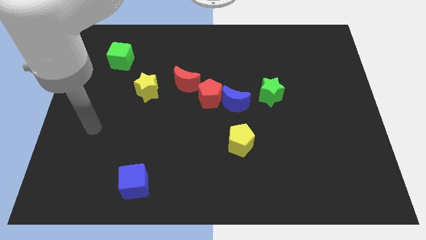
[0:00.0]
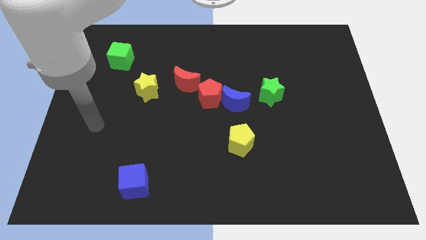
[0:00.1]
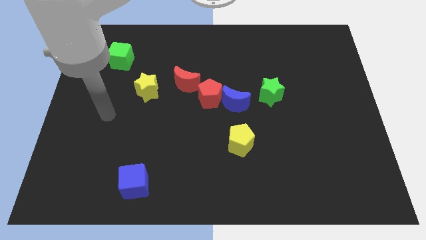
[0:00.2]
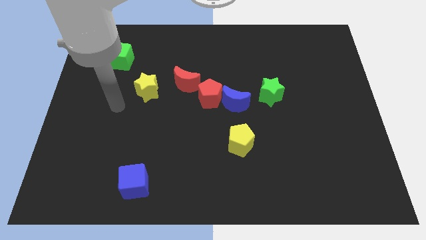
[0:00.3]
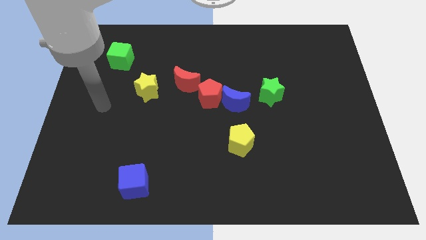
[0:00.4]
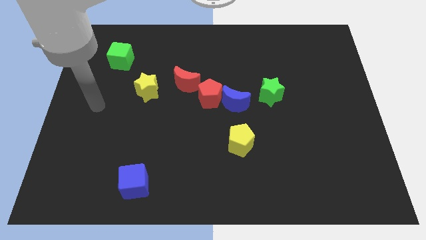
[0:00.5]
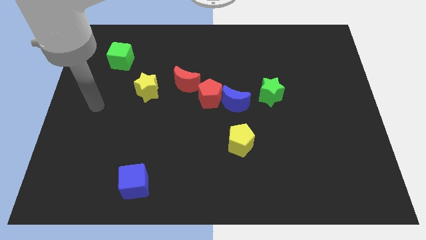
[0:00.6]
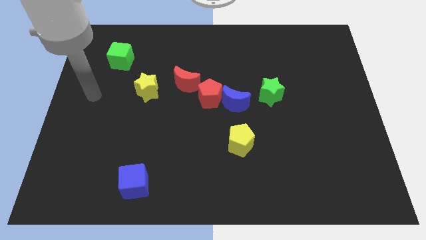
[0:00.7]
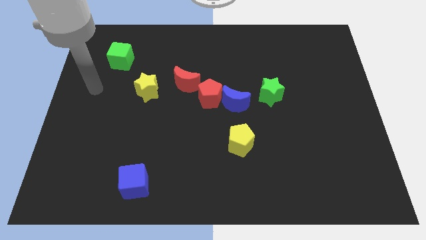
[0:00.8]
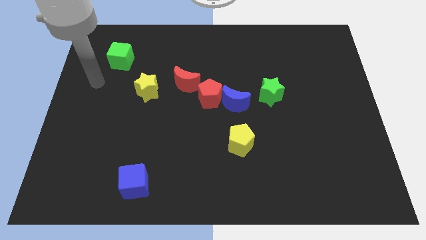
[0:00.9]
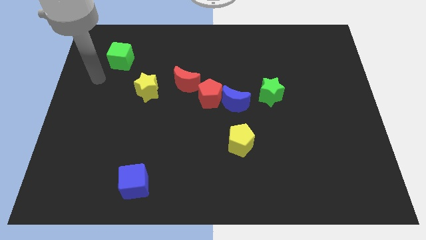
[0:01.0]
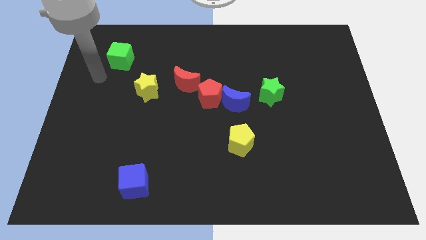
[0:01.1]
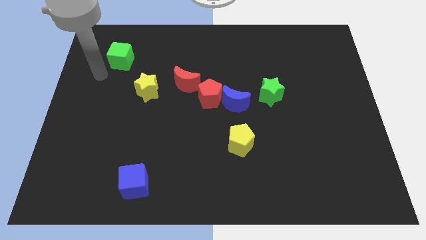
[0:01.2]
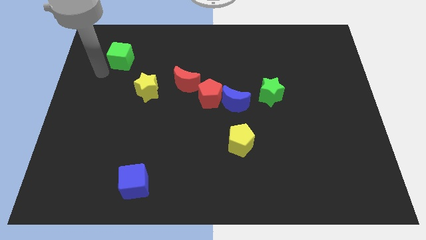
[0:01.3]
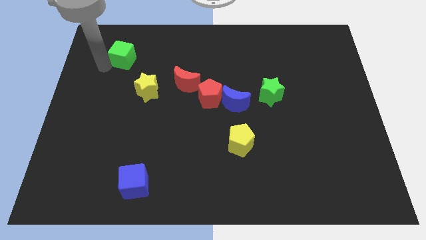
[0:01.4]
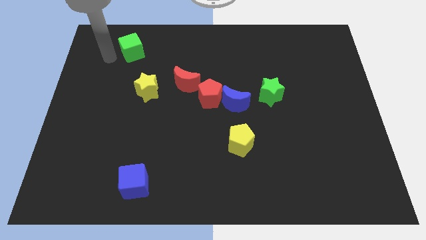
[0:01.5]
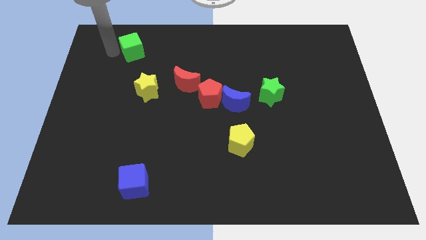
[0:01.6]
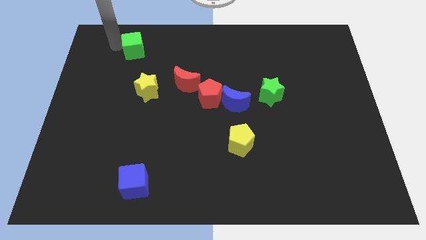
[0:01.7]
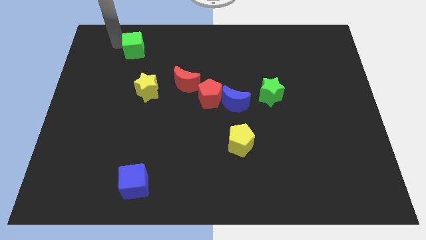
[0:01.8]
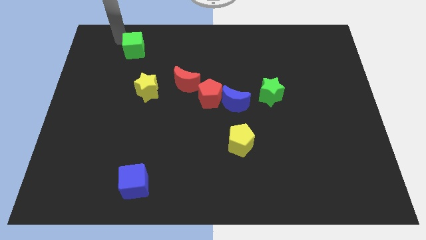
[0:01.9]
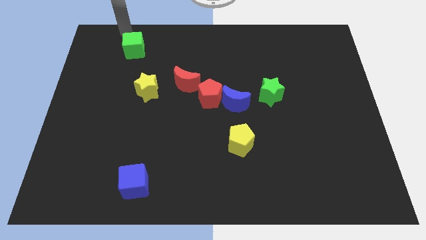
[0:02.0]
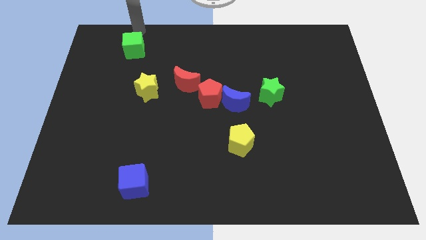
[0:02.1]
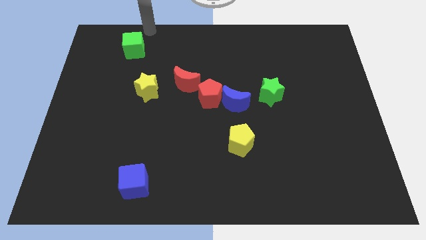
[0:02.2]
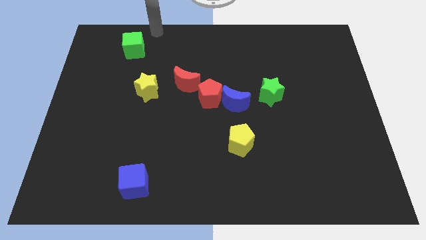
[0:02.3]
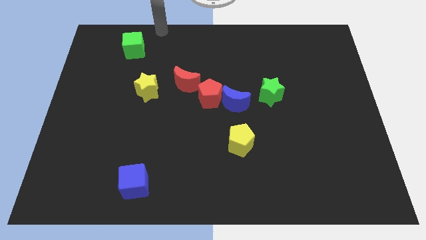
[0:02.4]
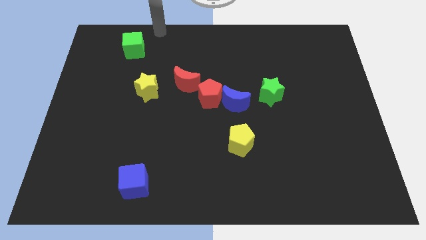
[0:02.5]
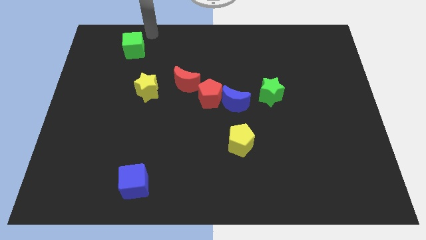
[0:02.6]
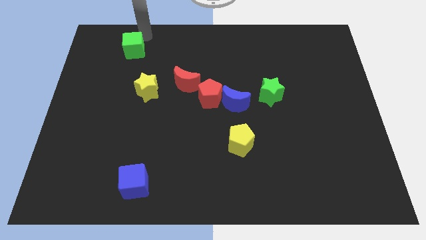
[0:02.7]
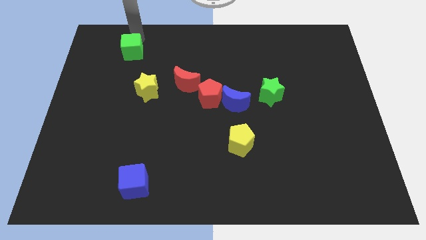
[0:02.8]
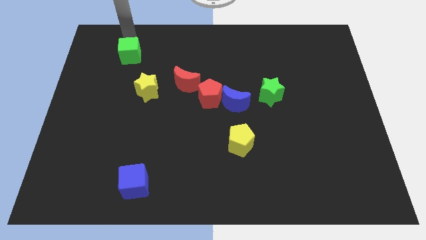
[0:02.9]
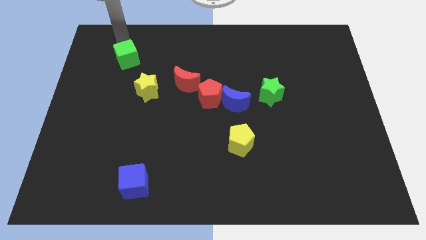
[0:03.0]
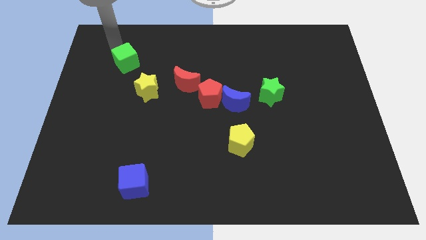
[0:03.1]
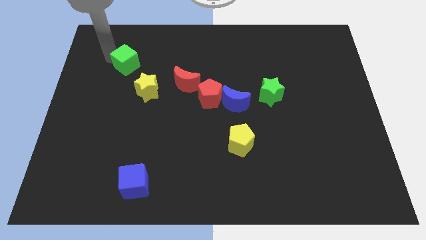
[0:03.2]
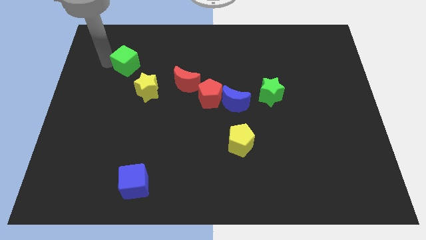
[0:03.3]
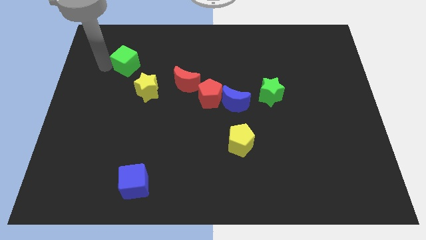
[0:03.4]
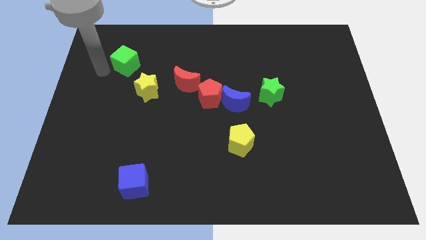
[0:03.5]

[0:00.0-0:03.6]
place the green cube diagonally to red moon

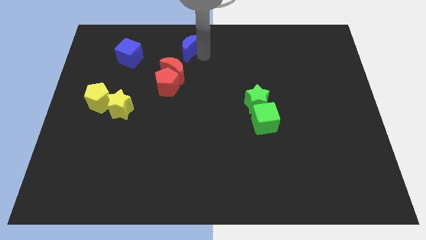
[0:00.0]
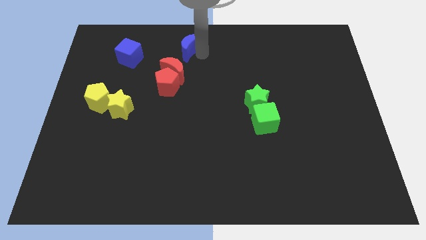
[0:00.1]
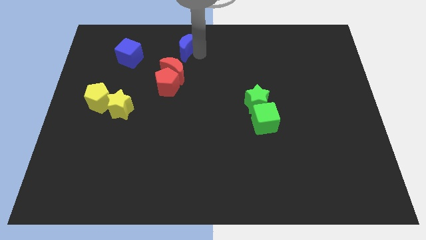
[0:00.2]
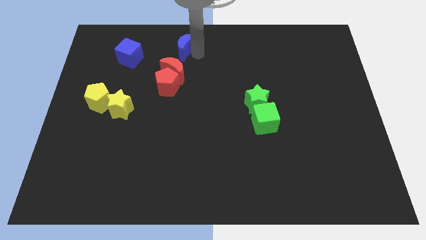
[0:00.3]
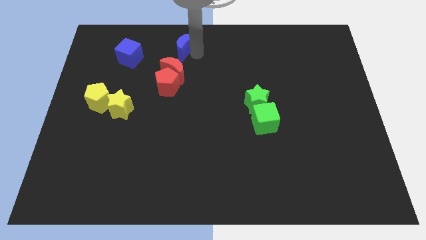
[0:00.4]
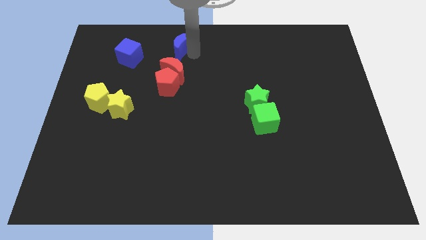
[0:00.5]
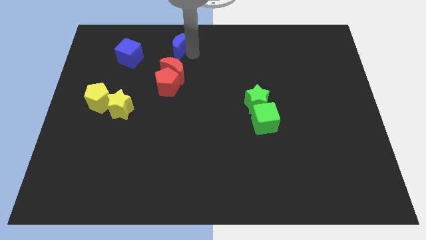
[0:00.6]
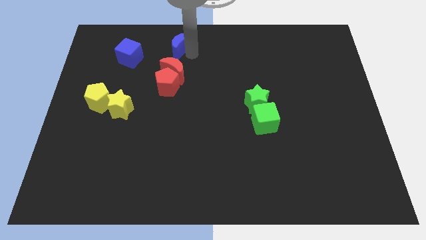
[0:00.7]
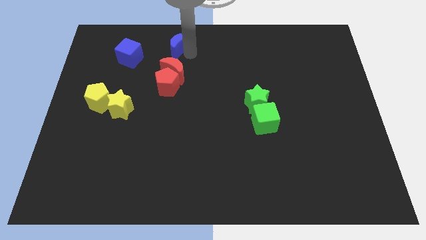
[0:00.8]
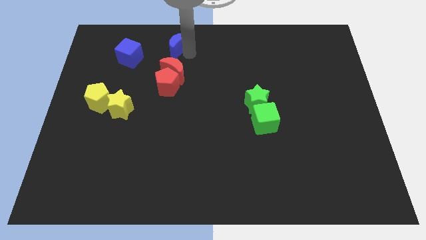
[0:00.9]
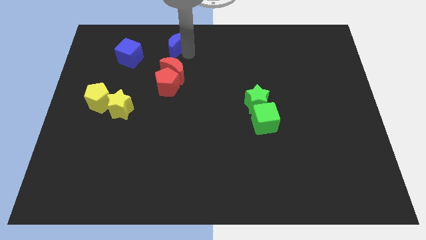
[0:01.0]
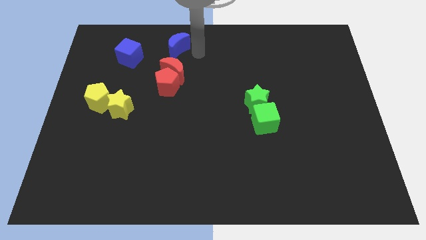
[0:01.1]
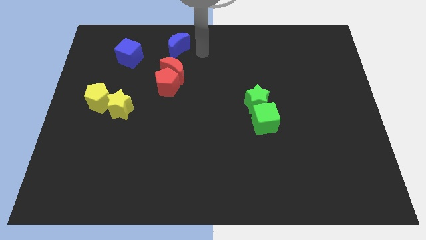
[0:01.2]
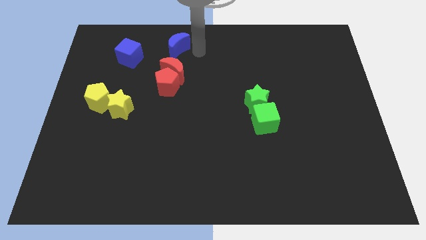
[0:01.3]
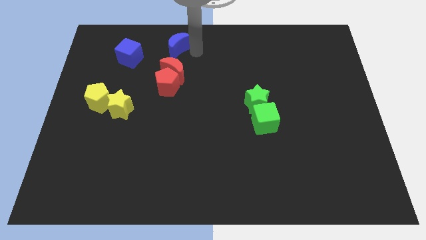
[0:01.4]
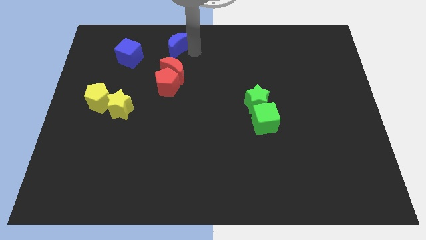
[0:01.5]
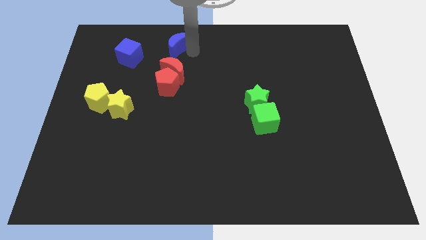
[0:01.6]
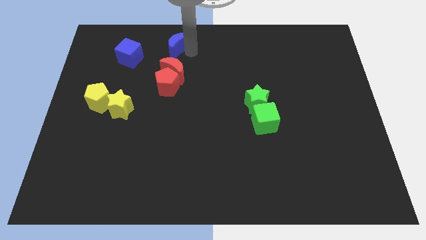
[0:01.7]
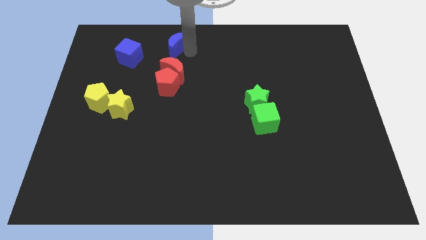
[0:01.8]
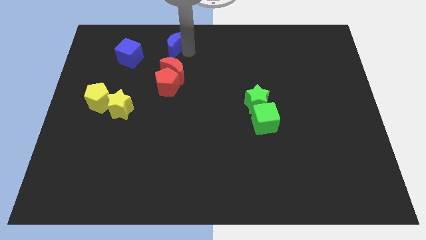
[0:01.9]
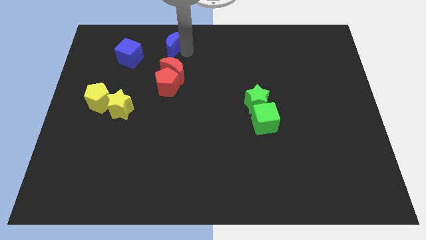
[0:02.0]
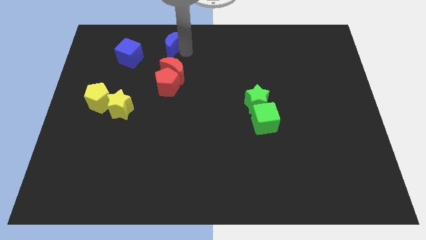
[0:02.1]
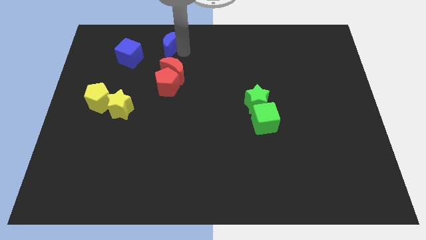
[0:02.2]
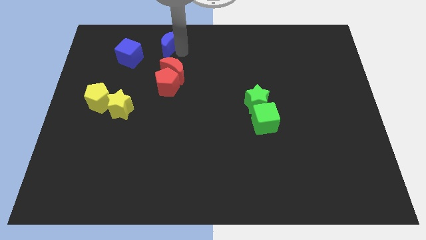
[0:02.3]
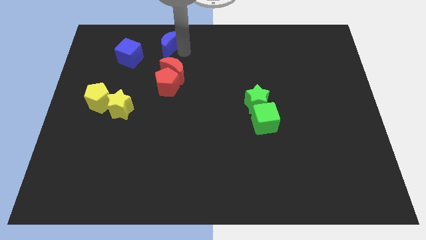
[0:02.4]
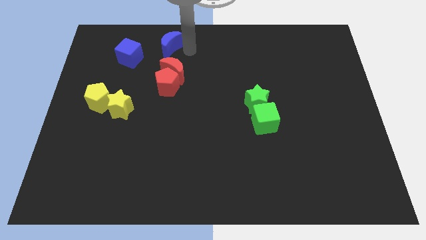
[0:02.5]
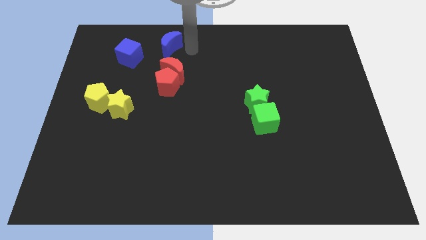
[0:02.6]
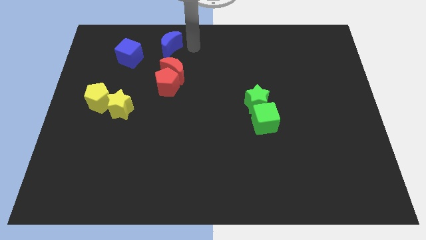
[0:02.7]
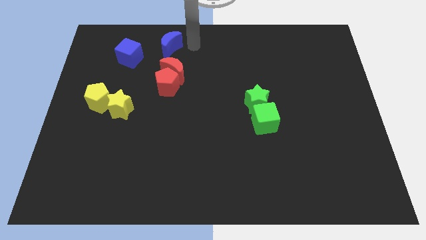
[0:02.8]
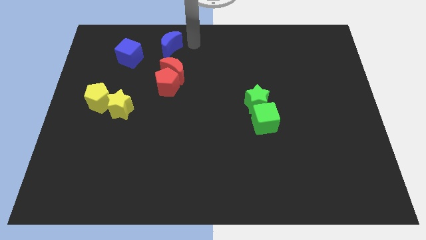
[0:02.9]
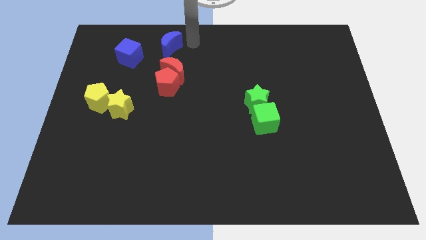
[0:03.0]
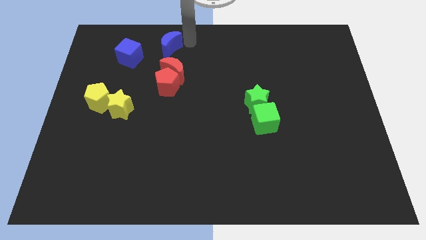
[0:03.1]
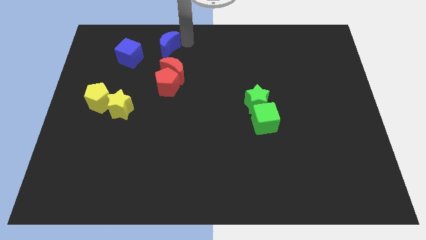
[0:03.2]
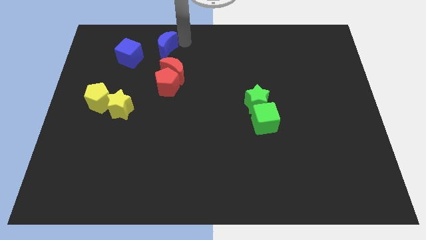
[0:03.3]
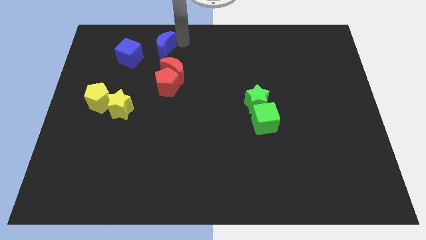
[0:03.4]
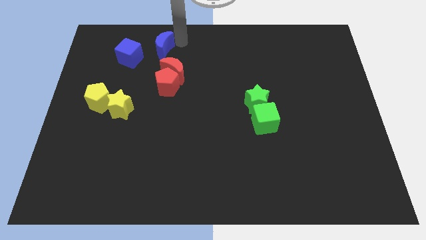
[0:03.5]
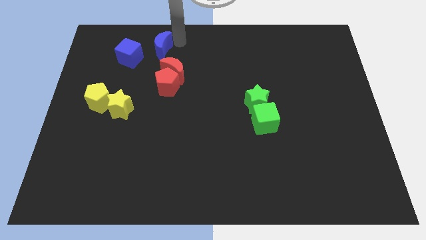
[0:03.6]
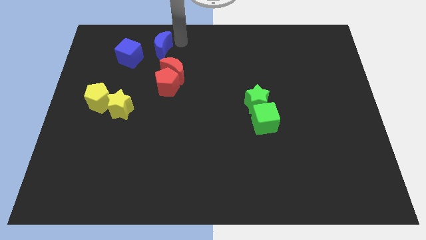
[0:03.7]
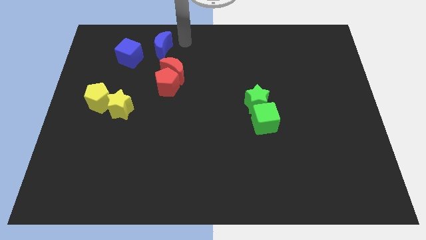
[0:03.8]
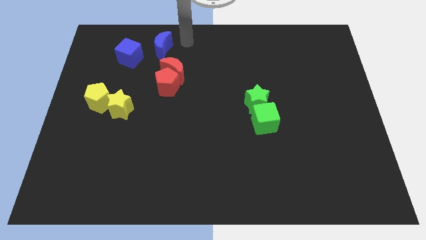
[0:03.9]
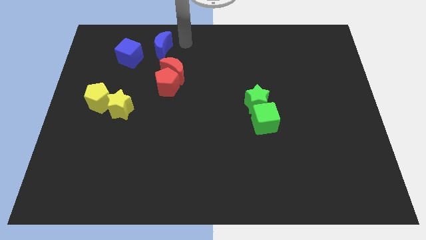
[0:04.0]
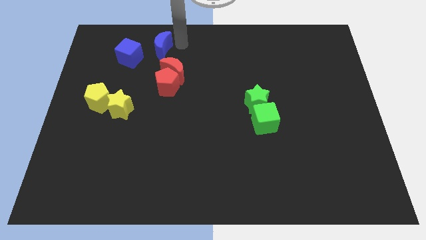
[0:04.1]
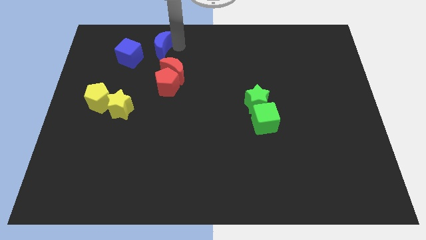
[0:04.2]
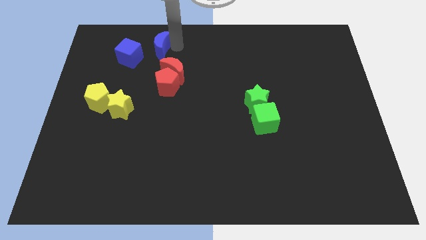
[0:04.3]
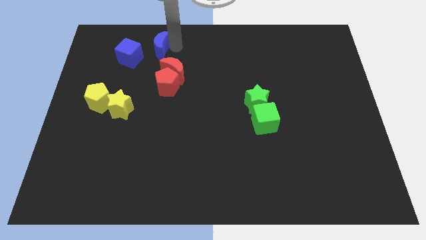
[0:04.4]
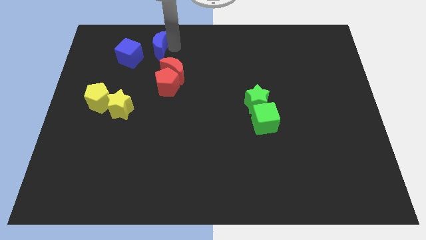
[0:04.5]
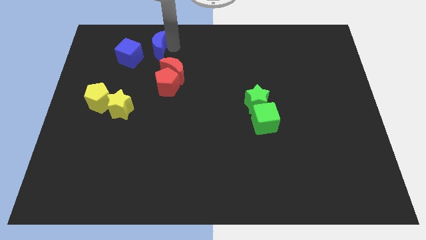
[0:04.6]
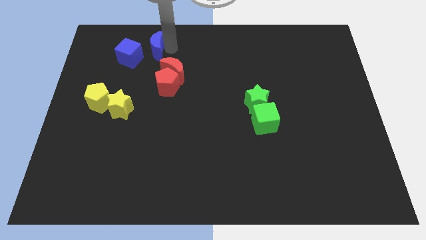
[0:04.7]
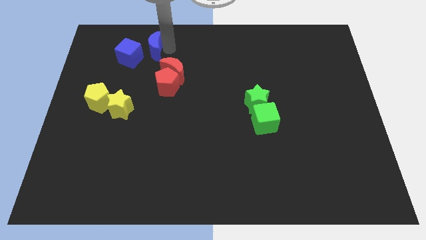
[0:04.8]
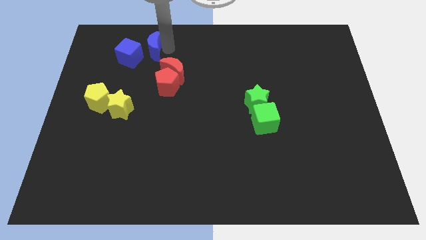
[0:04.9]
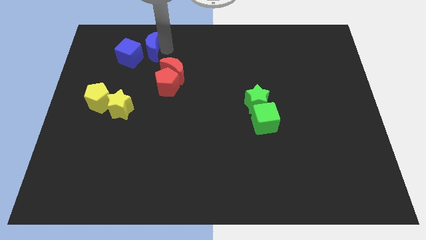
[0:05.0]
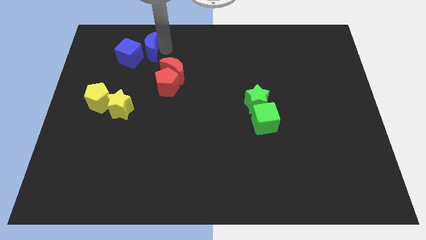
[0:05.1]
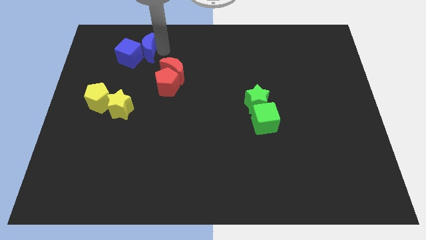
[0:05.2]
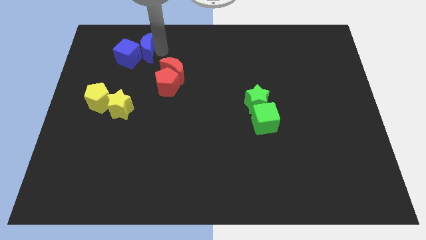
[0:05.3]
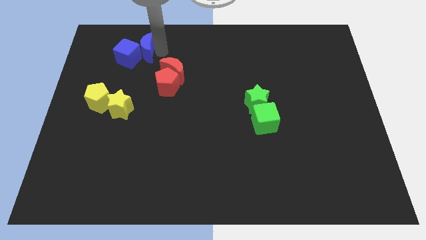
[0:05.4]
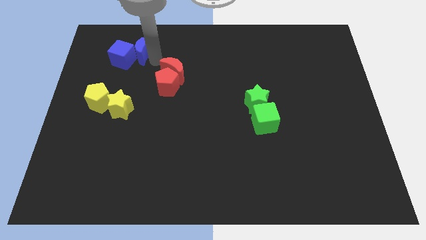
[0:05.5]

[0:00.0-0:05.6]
move the blue crescent into the right side of the blue cube

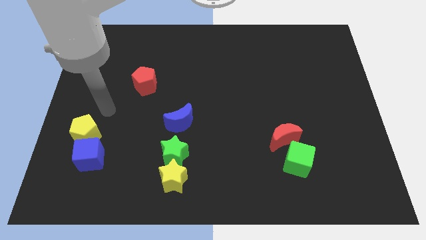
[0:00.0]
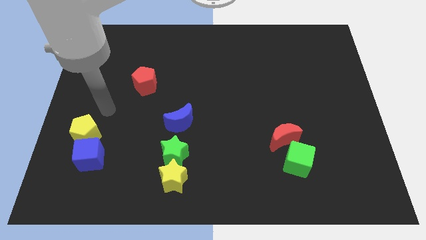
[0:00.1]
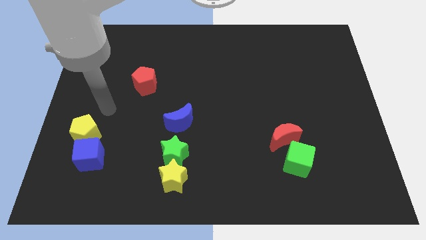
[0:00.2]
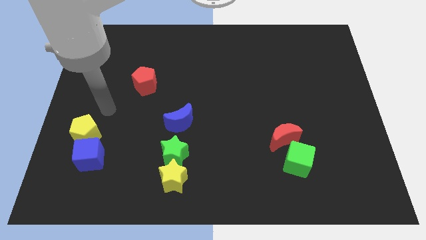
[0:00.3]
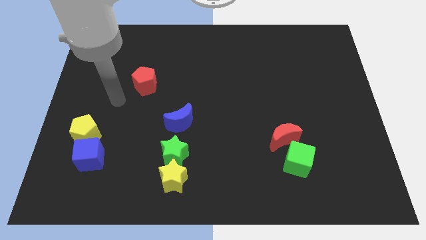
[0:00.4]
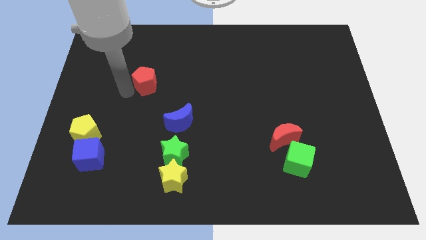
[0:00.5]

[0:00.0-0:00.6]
move arm near red pentagon
